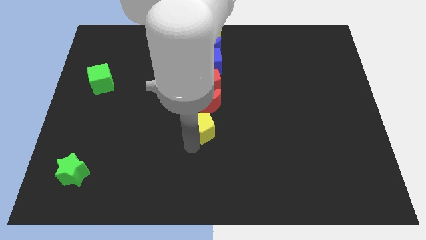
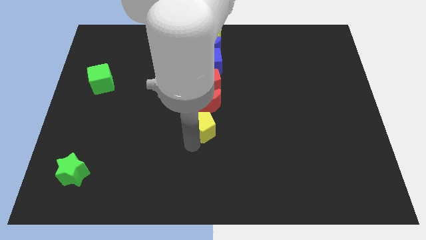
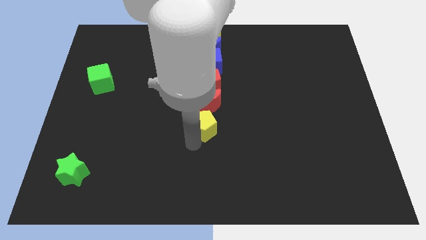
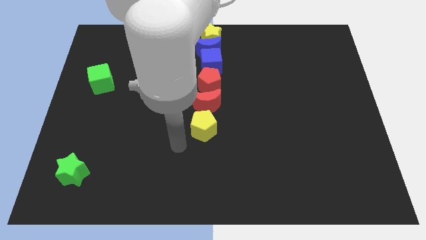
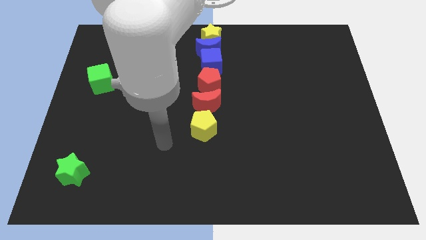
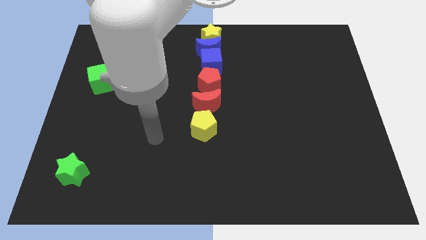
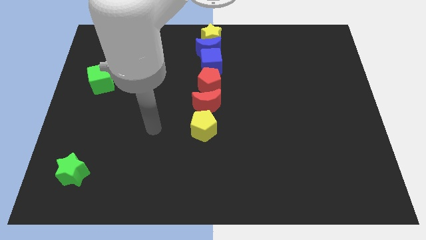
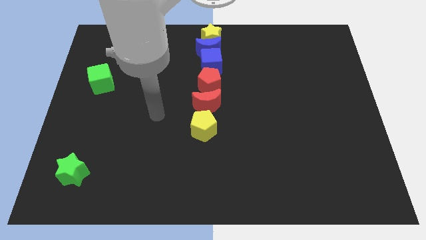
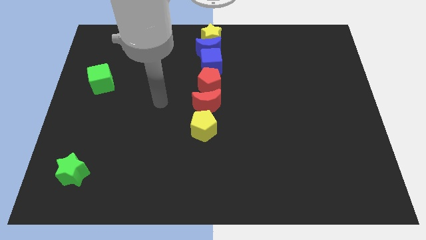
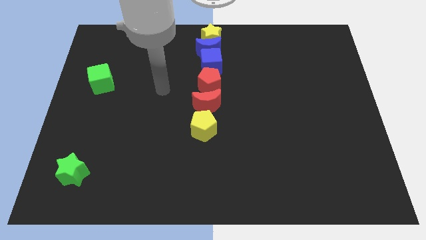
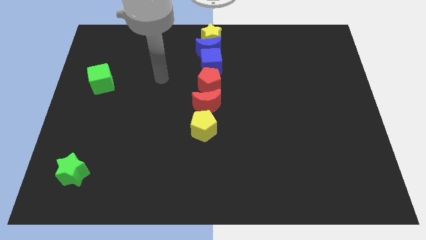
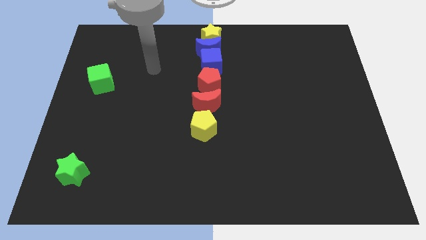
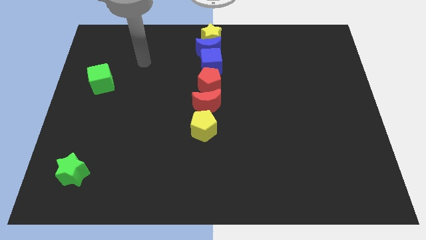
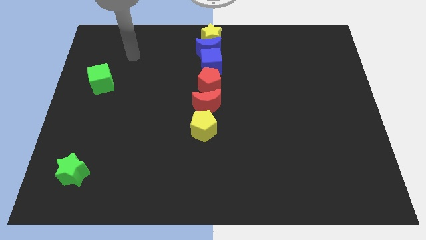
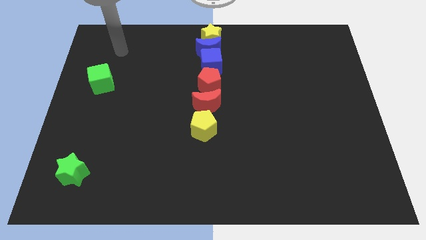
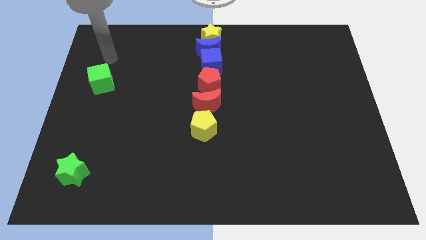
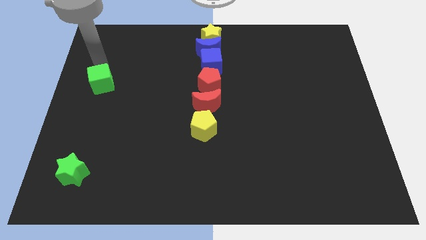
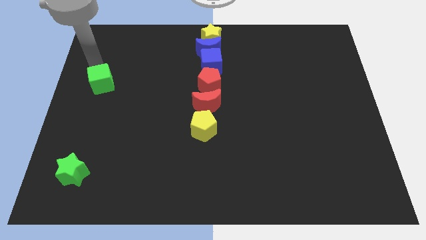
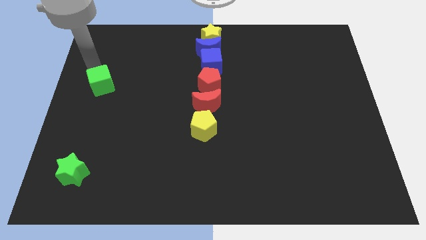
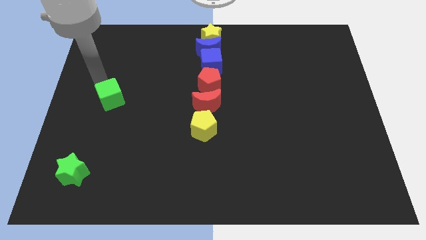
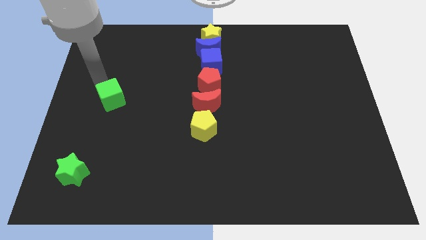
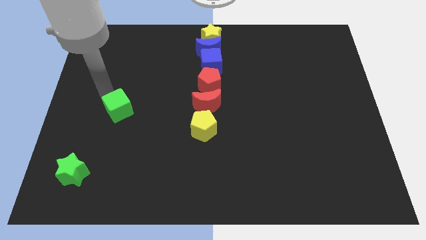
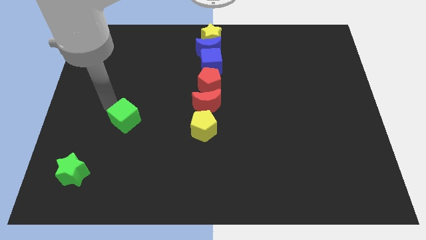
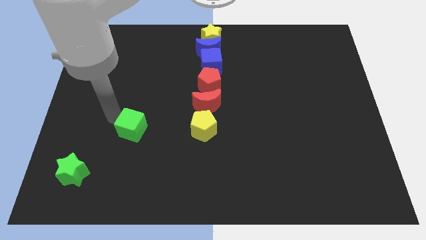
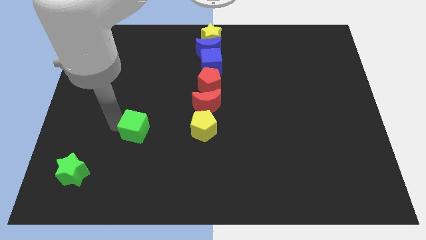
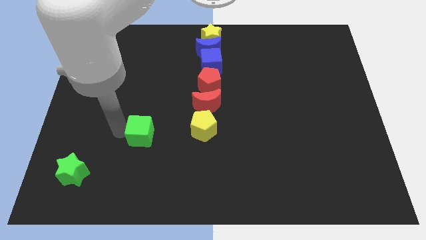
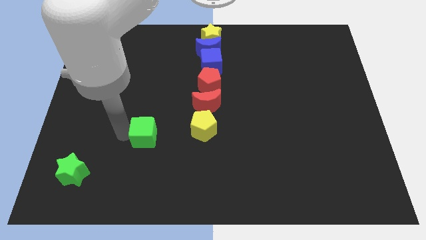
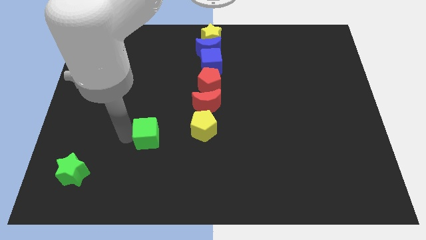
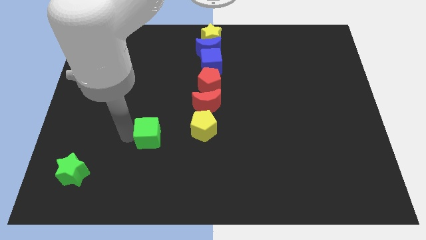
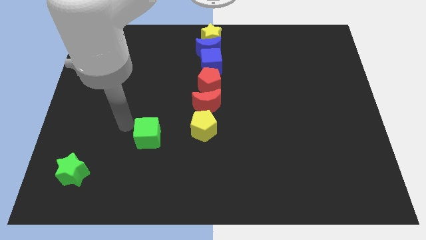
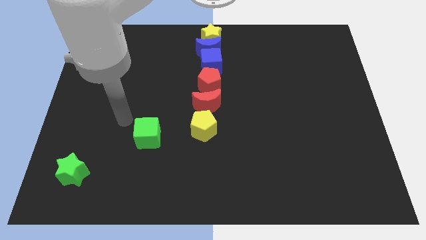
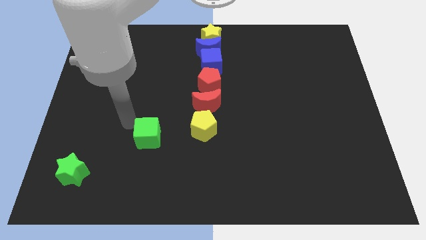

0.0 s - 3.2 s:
place the green cube left to the yellow pentagon

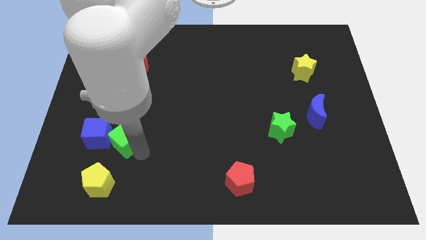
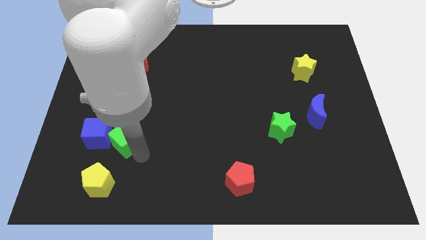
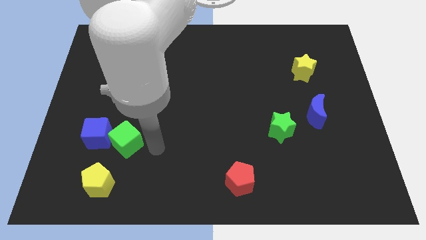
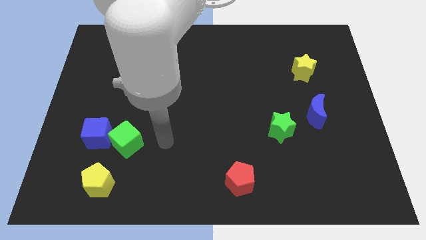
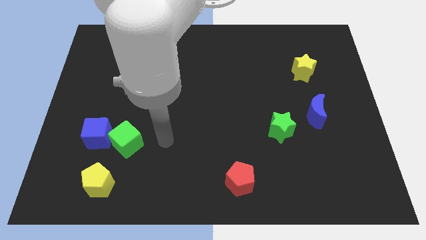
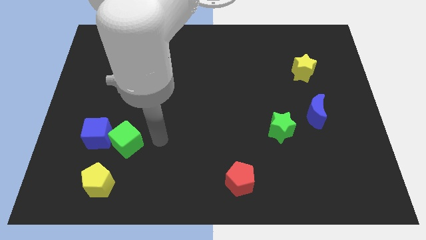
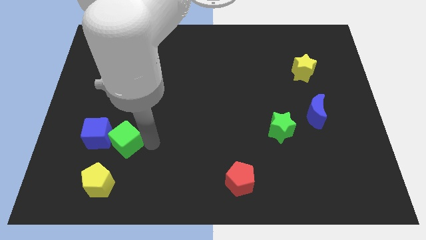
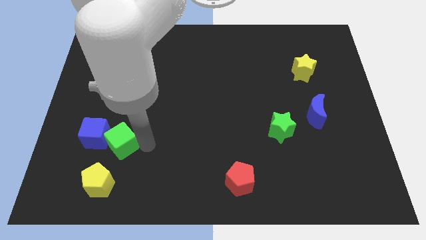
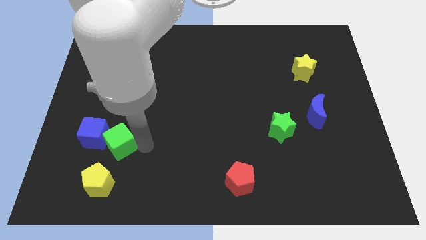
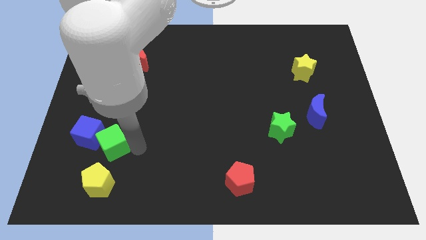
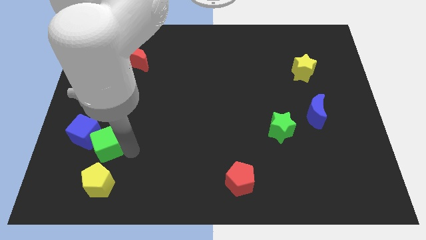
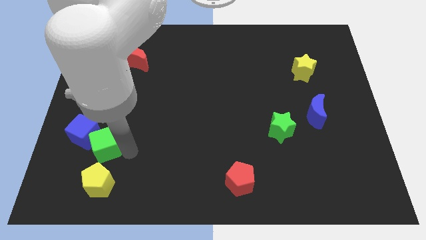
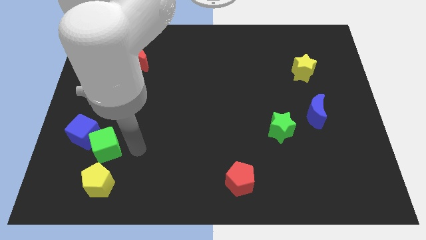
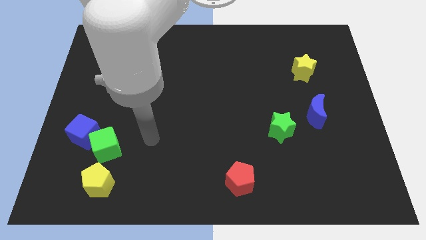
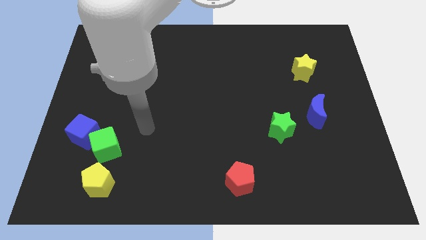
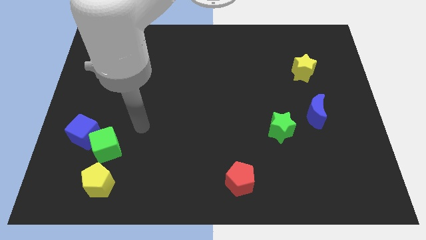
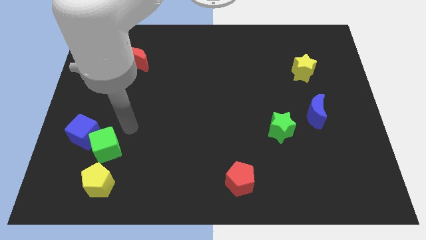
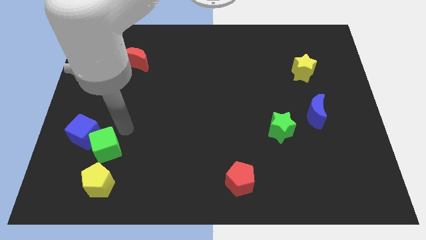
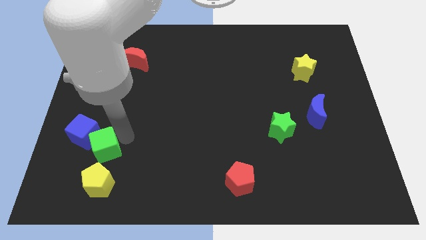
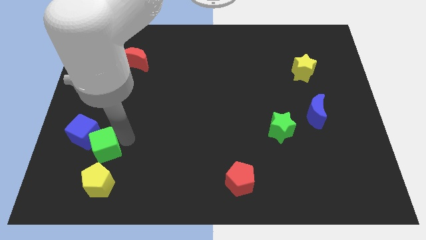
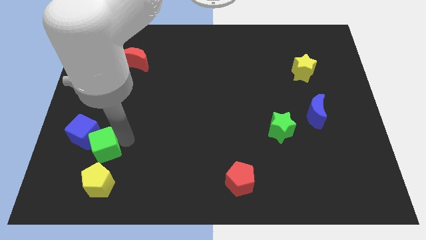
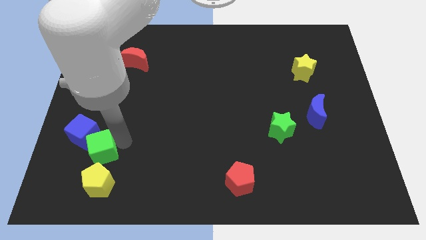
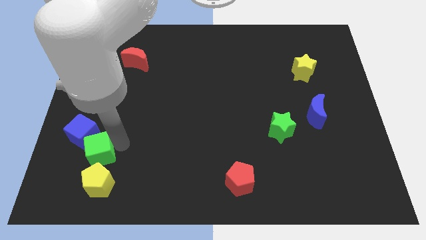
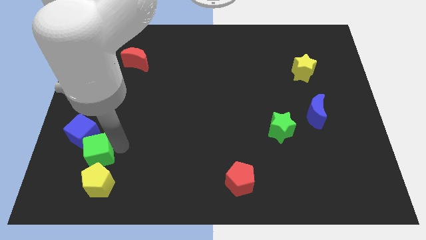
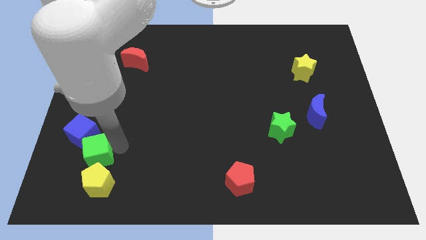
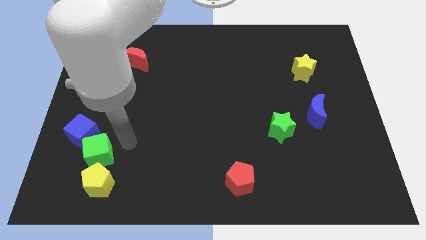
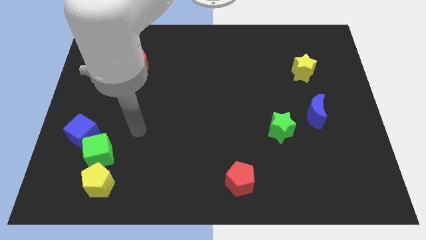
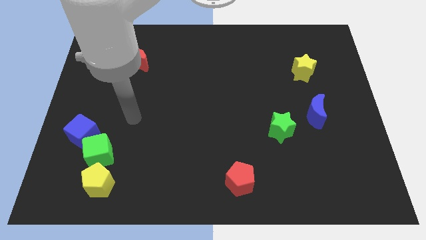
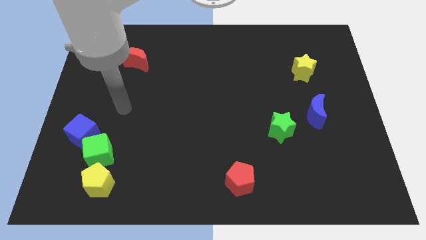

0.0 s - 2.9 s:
place green cube at the top of yellow pentagon

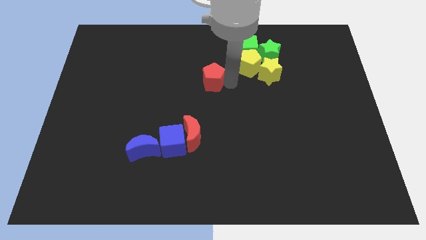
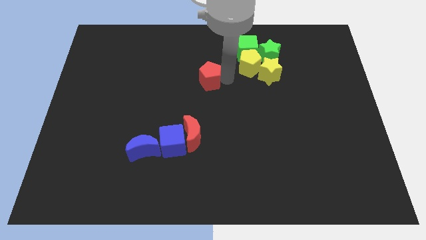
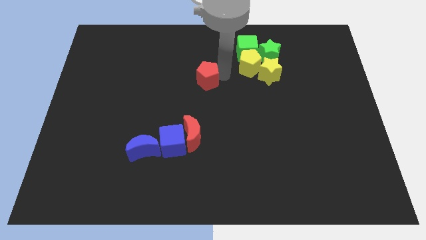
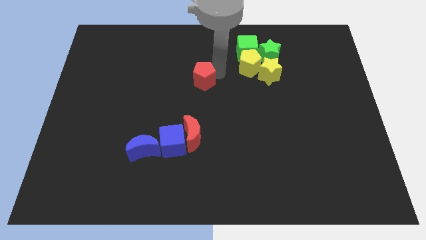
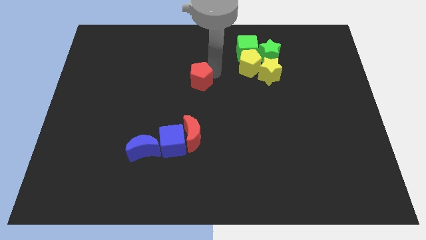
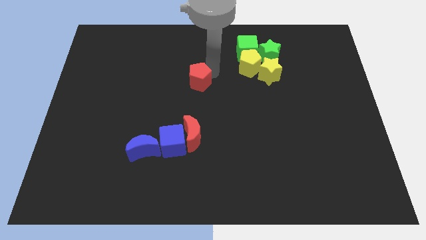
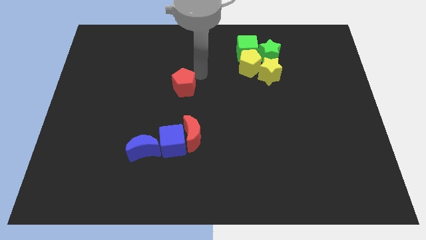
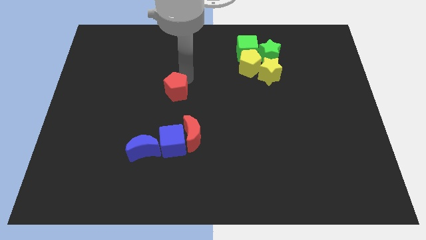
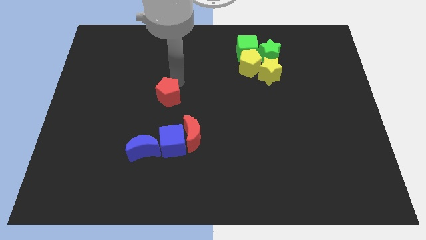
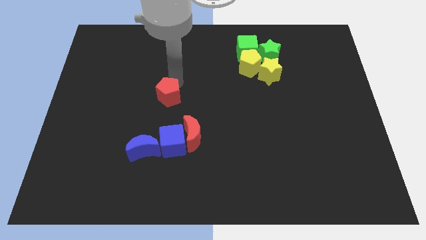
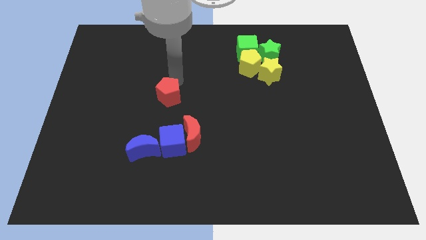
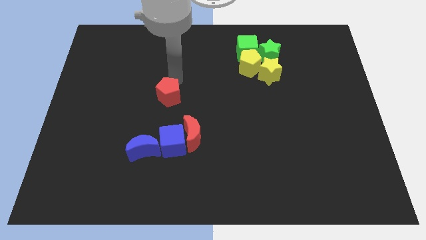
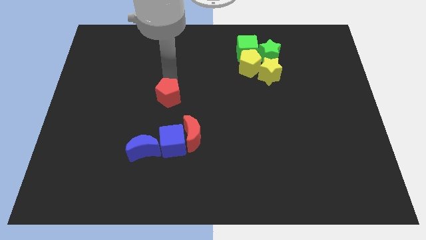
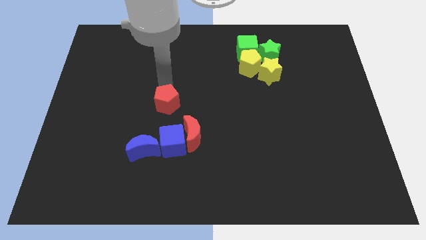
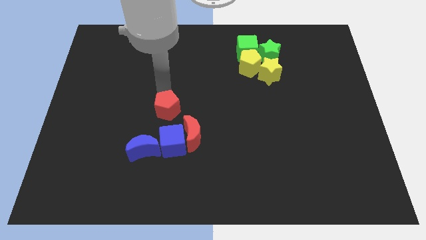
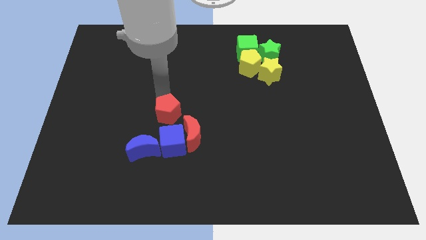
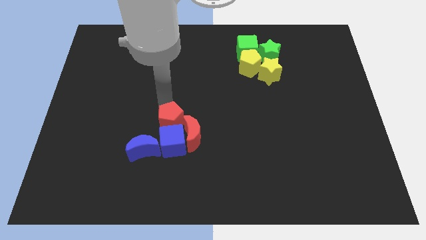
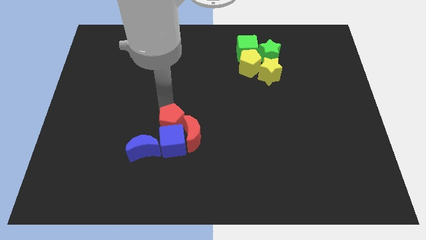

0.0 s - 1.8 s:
push the red pentagon into blue cube on top

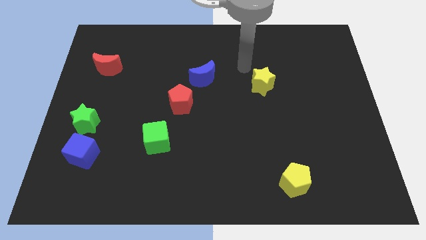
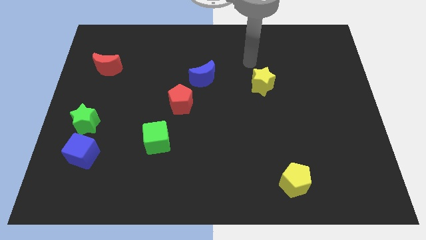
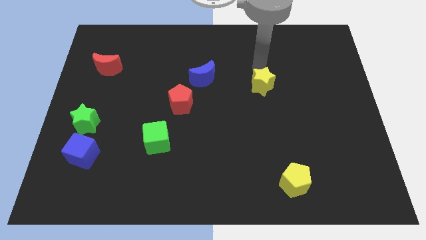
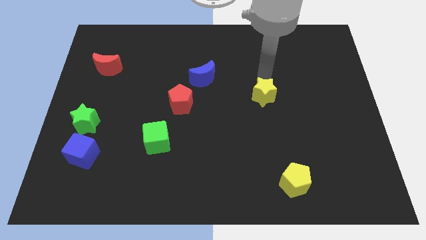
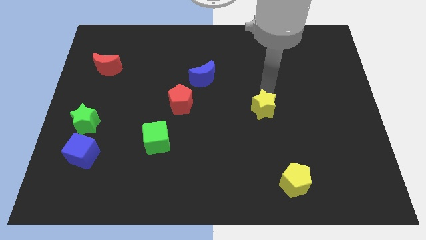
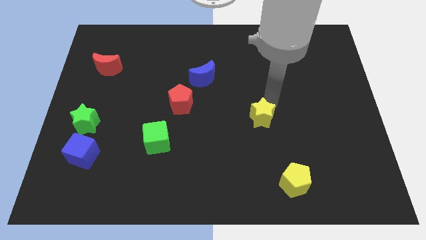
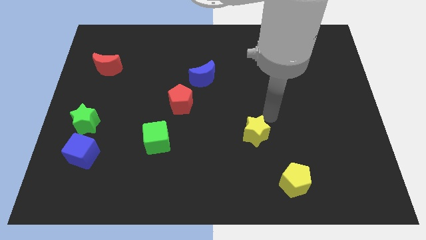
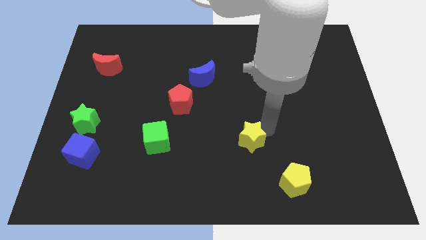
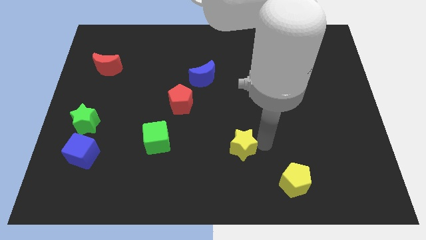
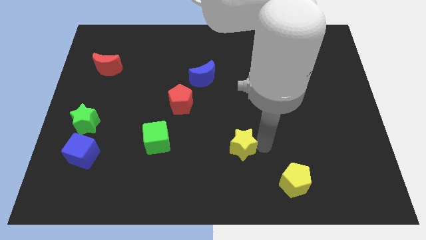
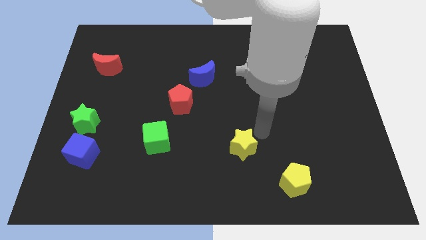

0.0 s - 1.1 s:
move the yellow star to the right of the green cube

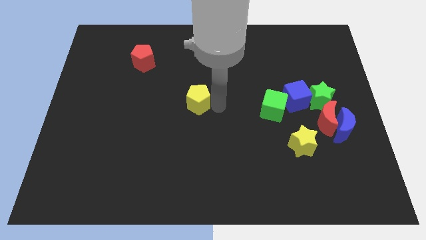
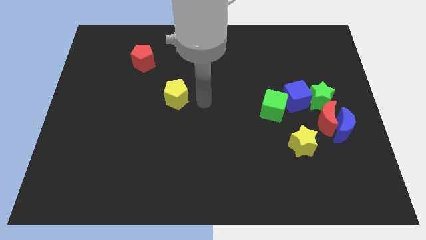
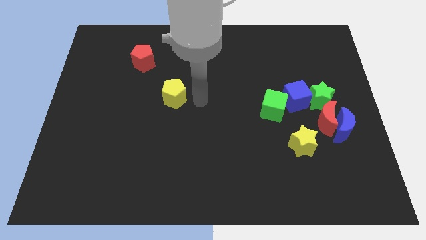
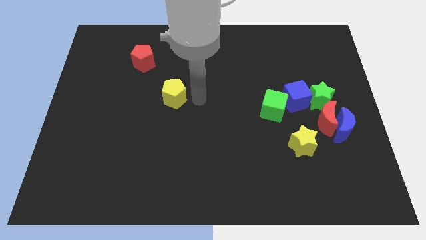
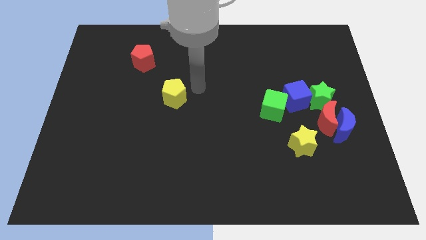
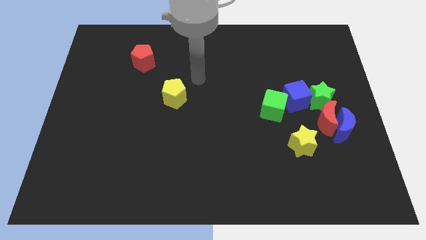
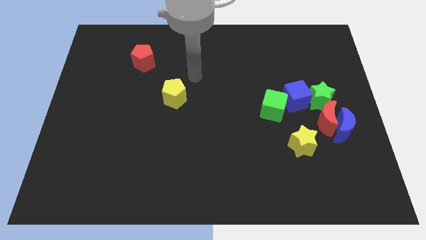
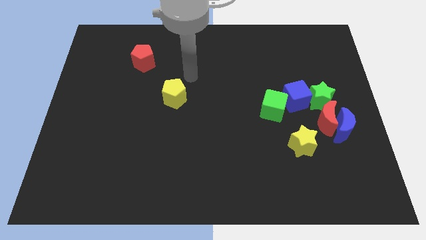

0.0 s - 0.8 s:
move yellow star slightly to the center of the board
